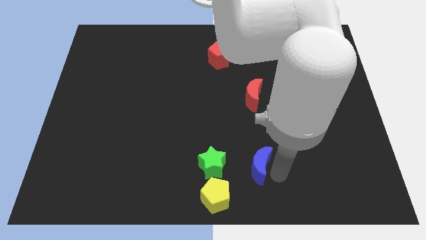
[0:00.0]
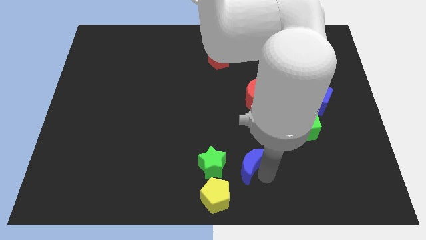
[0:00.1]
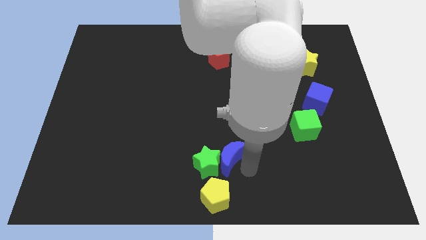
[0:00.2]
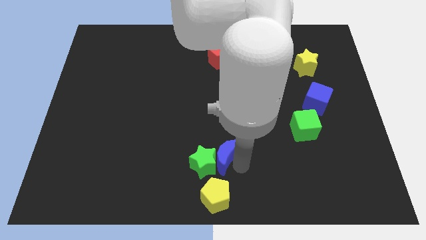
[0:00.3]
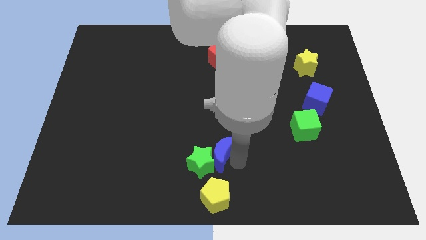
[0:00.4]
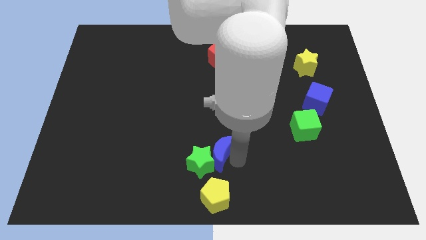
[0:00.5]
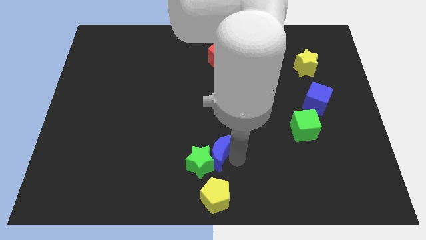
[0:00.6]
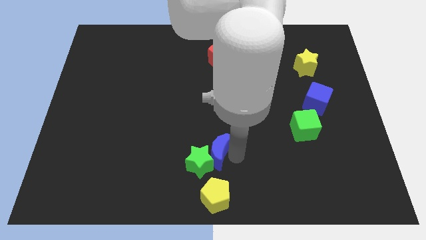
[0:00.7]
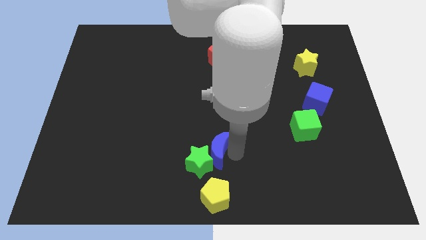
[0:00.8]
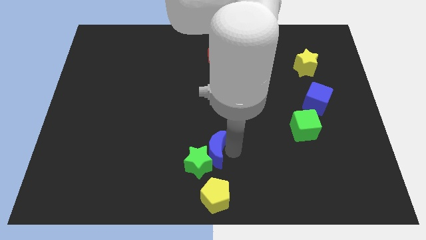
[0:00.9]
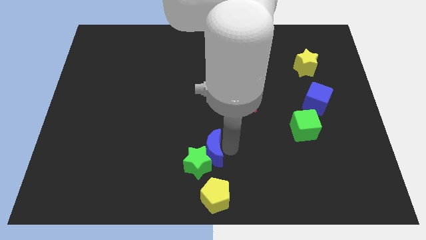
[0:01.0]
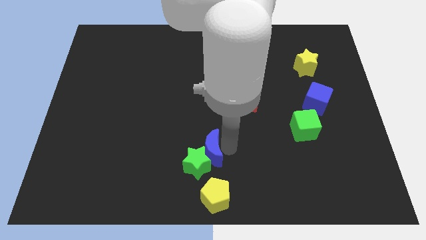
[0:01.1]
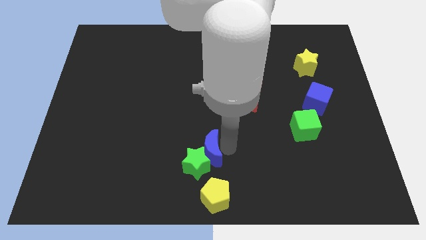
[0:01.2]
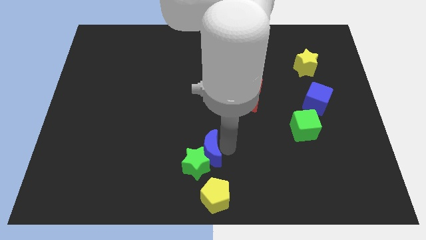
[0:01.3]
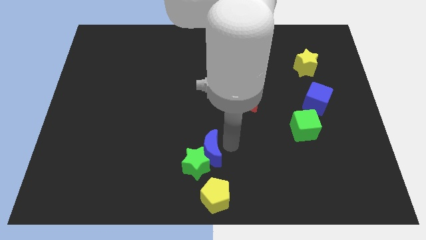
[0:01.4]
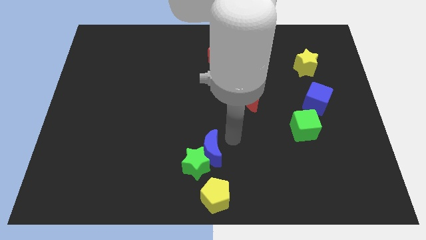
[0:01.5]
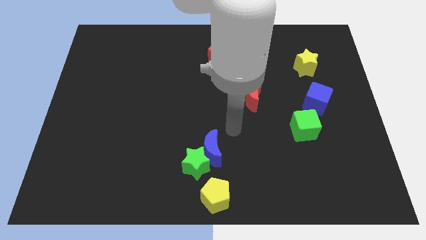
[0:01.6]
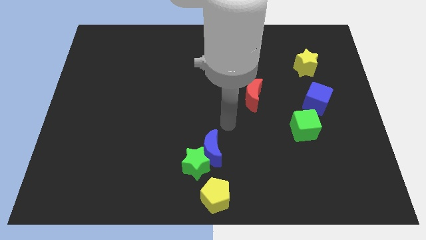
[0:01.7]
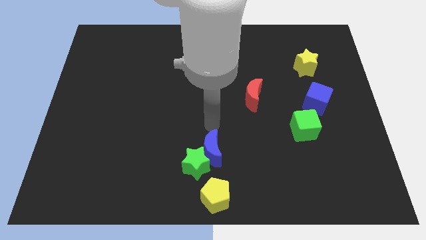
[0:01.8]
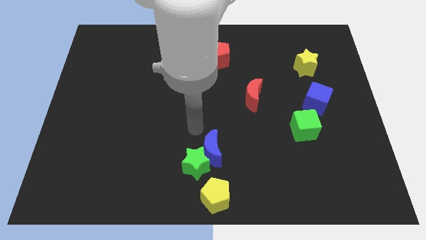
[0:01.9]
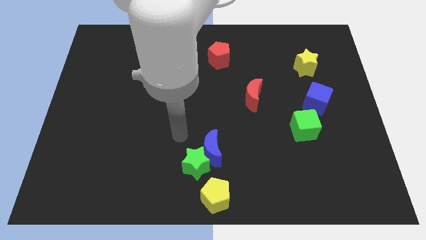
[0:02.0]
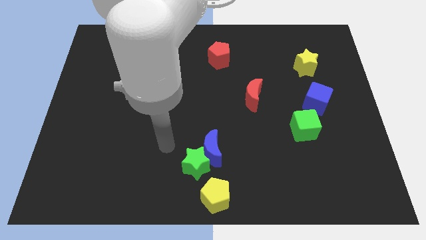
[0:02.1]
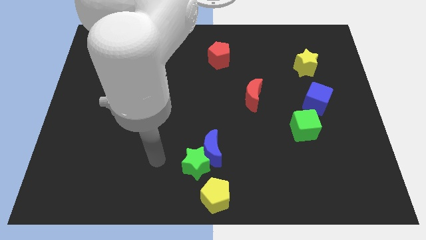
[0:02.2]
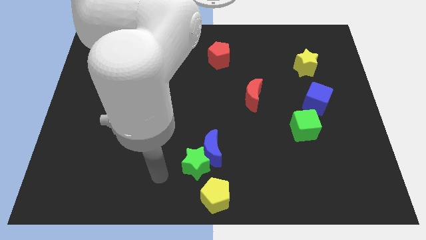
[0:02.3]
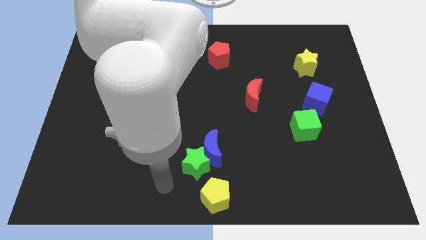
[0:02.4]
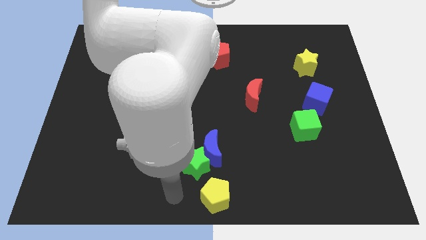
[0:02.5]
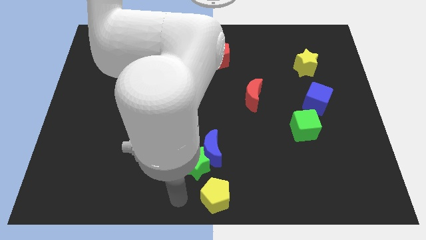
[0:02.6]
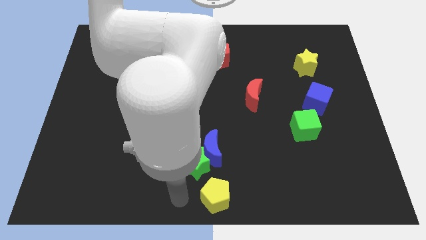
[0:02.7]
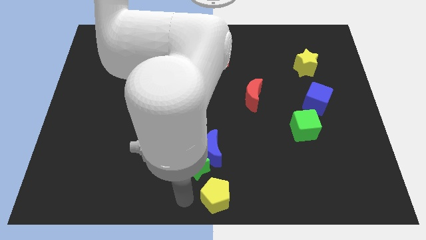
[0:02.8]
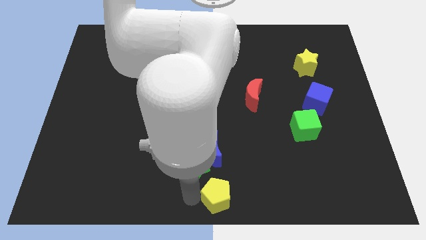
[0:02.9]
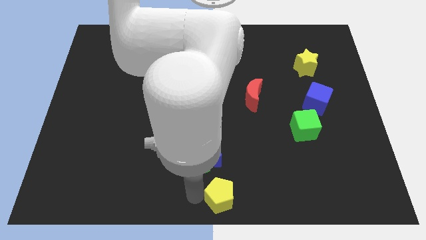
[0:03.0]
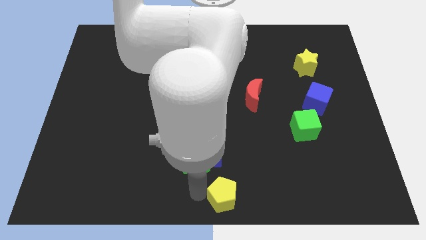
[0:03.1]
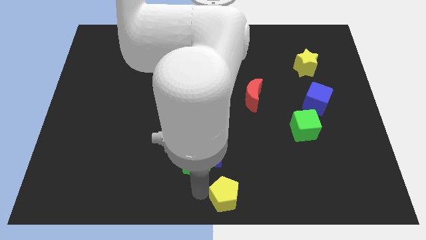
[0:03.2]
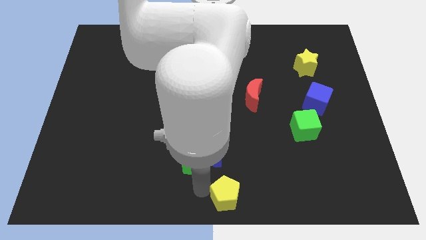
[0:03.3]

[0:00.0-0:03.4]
slide the yellow pentagon

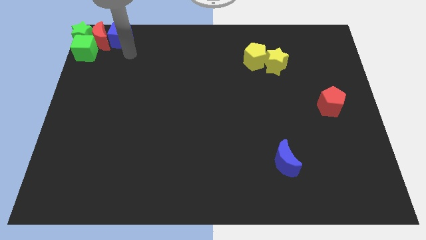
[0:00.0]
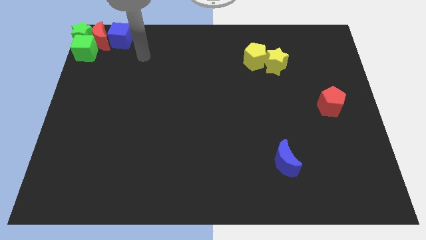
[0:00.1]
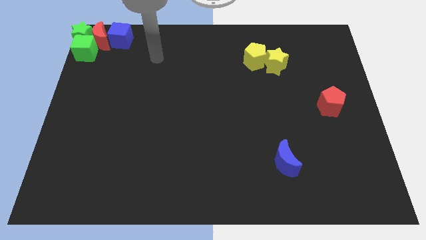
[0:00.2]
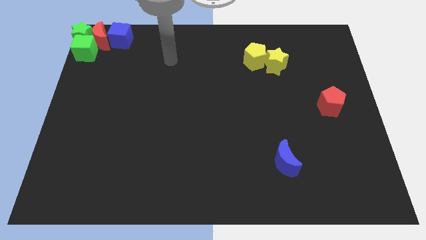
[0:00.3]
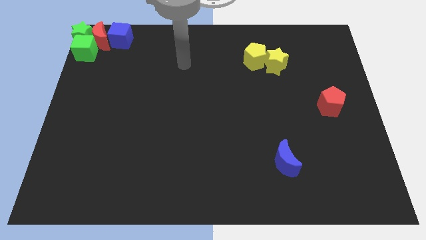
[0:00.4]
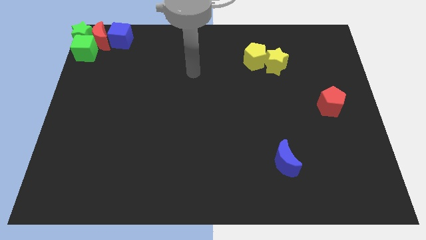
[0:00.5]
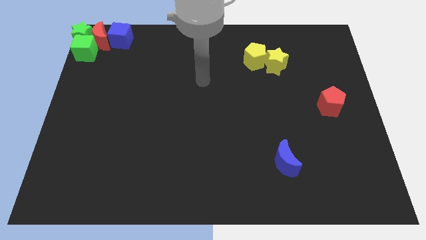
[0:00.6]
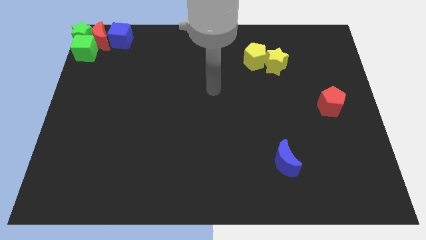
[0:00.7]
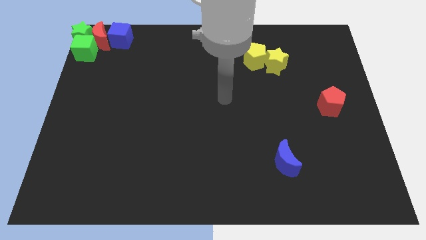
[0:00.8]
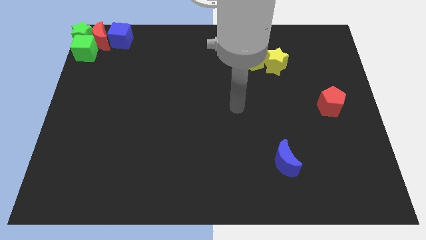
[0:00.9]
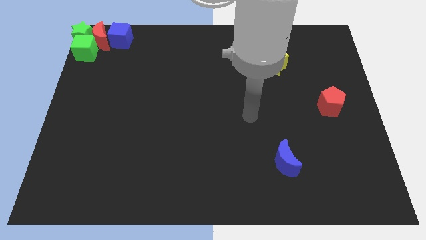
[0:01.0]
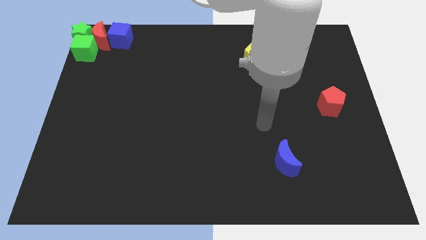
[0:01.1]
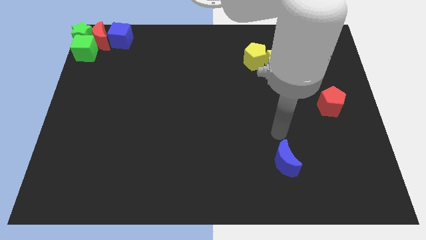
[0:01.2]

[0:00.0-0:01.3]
drag your arm away from the blue cube

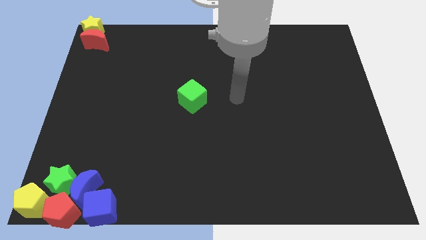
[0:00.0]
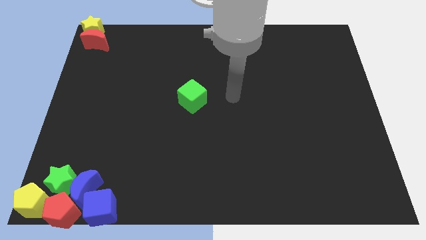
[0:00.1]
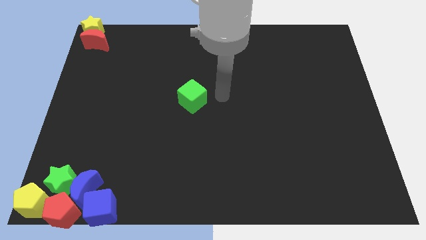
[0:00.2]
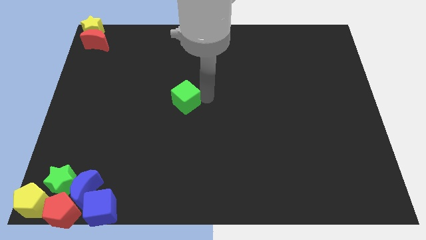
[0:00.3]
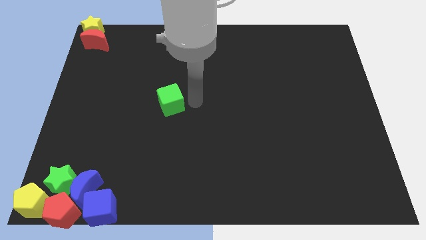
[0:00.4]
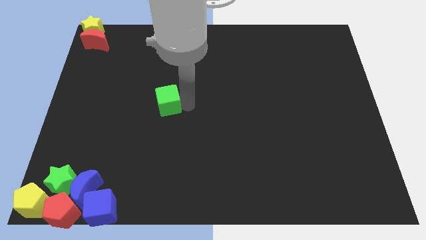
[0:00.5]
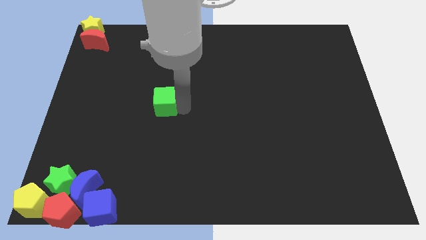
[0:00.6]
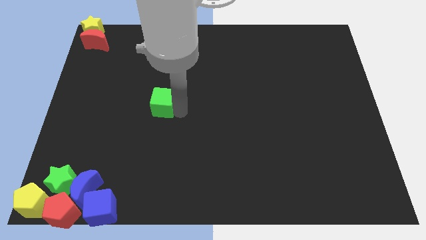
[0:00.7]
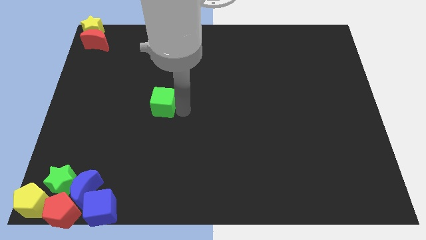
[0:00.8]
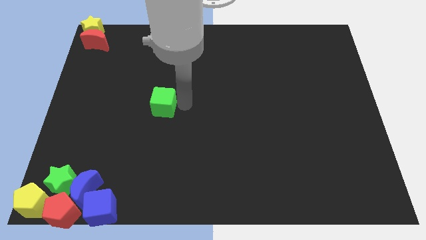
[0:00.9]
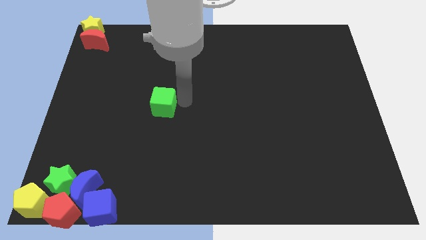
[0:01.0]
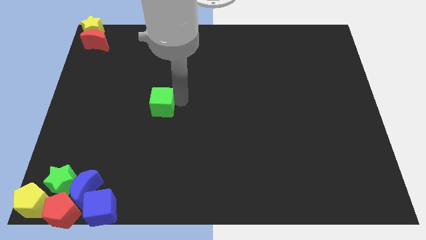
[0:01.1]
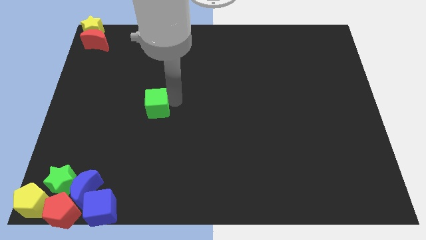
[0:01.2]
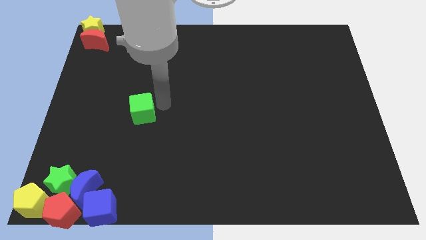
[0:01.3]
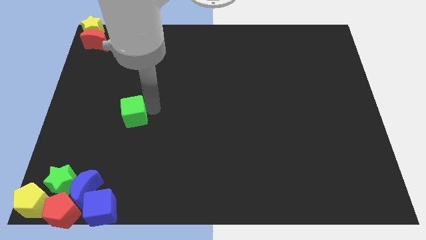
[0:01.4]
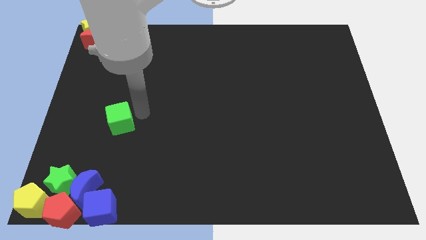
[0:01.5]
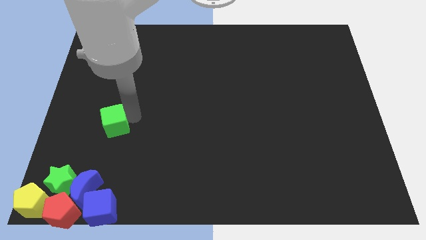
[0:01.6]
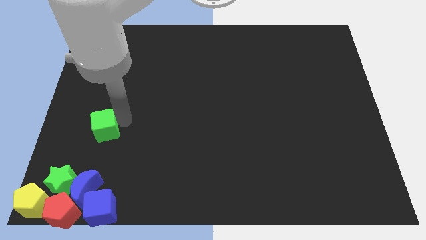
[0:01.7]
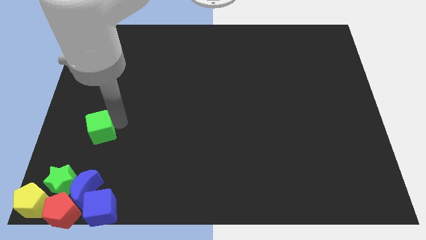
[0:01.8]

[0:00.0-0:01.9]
place the green cube vertically above the blue crescent

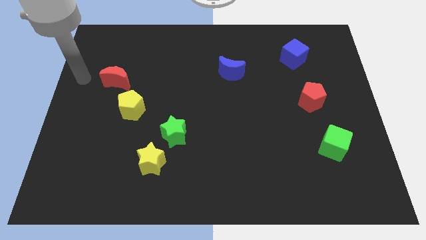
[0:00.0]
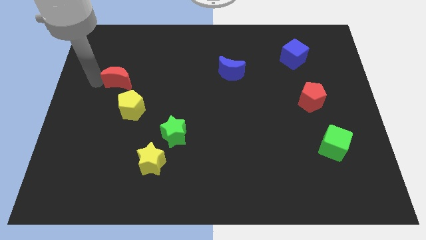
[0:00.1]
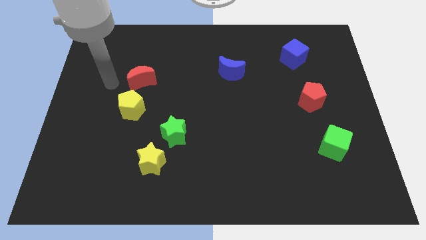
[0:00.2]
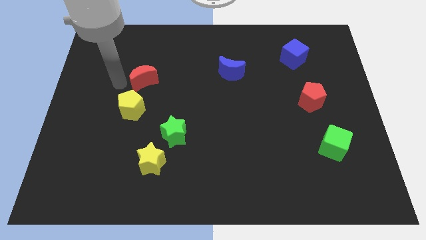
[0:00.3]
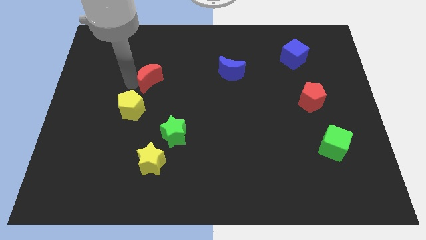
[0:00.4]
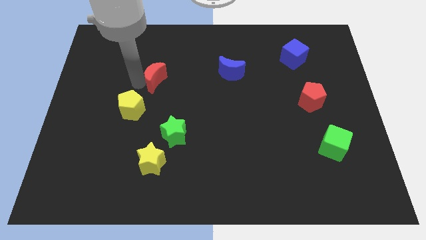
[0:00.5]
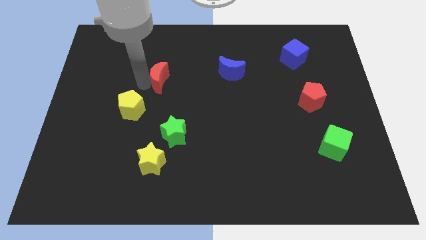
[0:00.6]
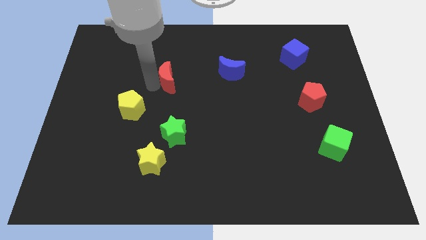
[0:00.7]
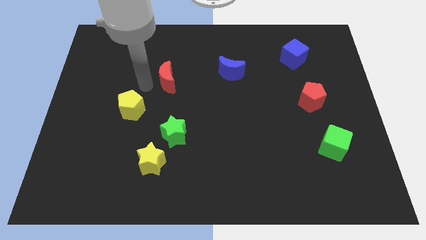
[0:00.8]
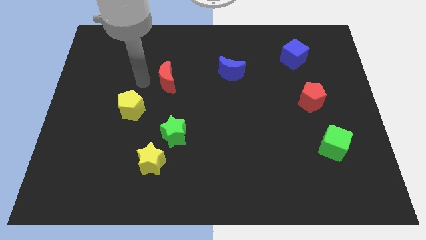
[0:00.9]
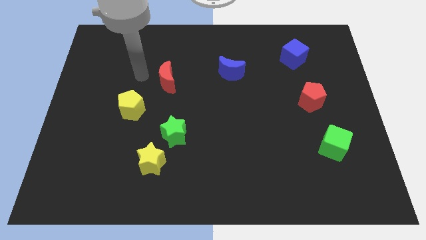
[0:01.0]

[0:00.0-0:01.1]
push red crescent above green star

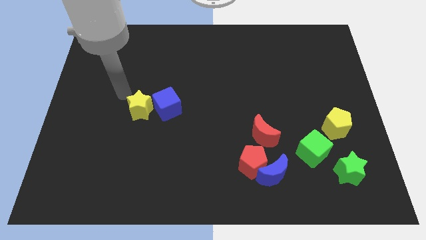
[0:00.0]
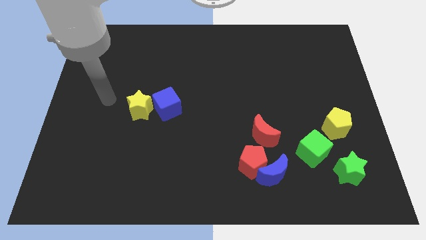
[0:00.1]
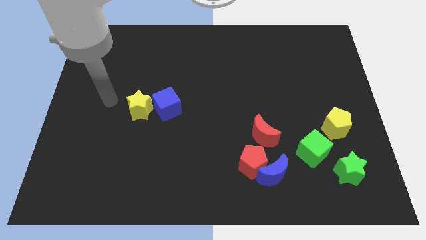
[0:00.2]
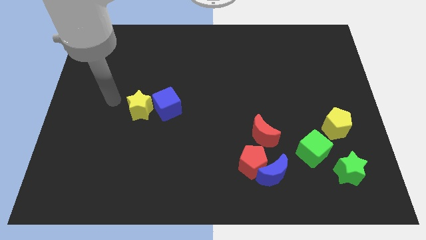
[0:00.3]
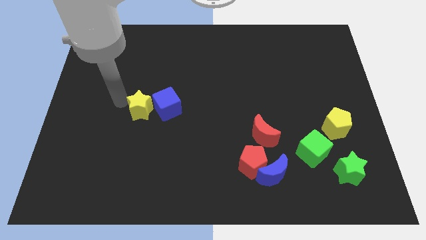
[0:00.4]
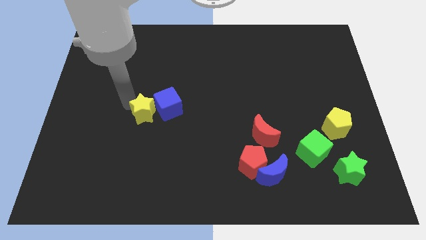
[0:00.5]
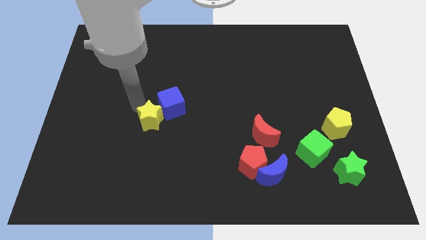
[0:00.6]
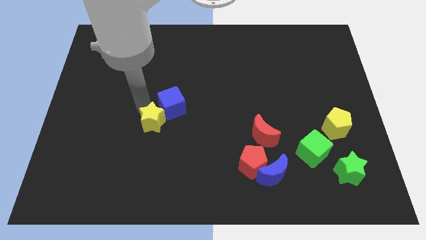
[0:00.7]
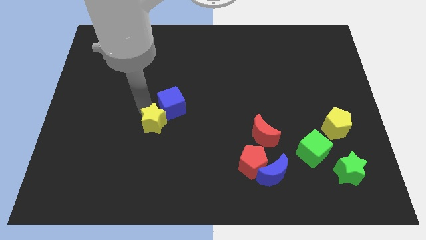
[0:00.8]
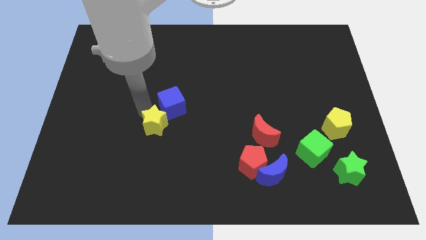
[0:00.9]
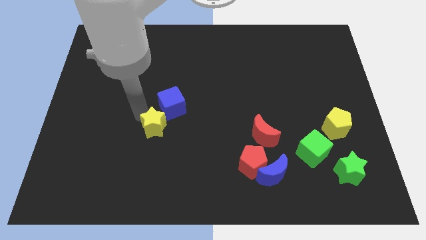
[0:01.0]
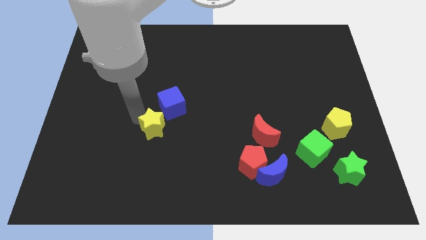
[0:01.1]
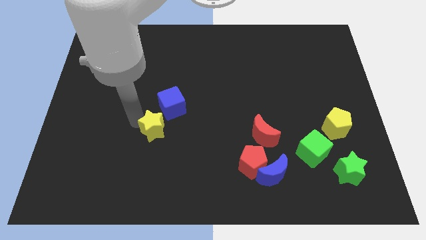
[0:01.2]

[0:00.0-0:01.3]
move the yellow star downwards of the board
